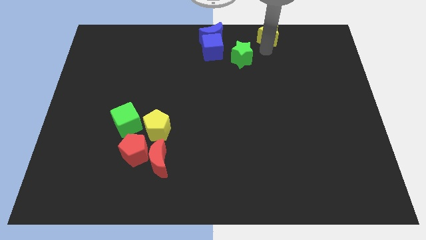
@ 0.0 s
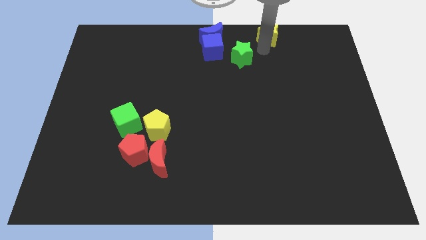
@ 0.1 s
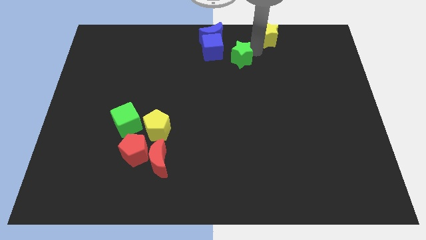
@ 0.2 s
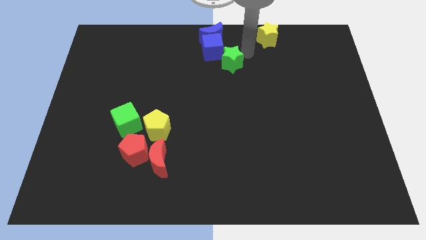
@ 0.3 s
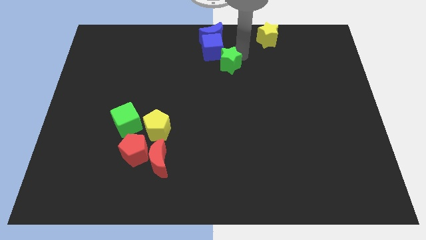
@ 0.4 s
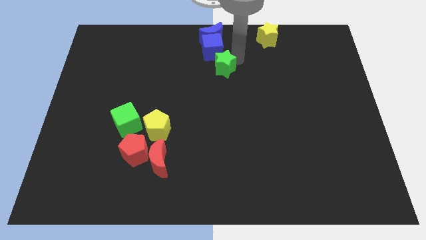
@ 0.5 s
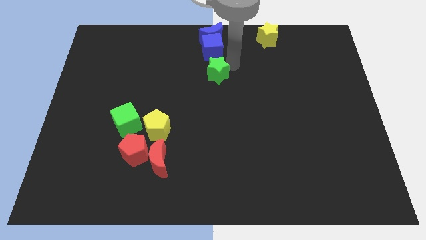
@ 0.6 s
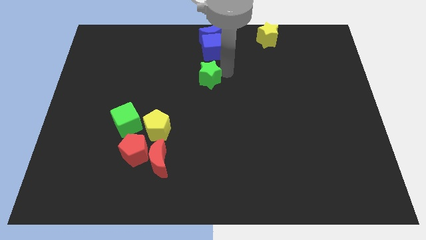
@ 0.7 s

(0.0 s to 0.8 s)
move the green star below to the blue cube

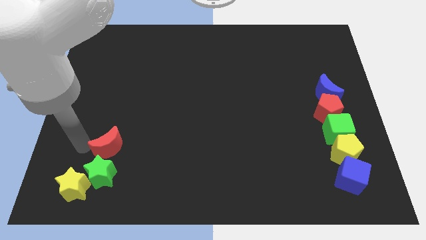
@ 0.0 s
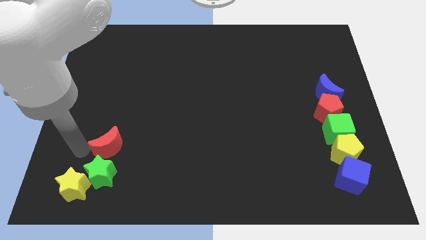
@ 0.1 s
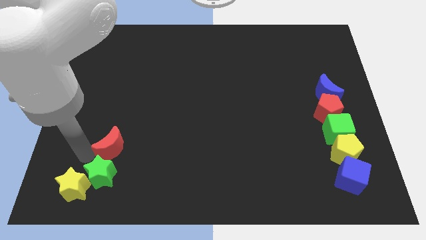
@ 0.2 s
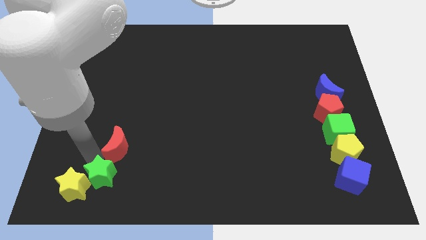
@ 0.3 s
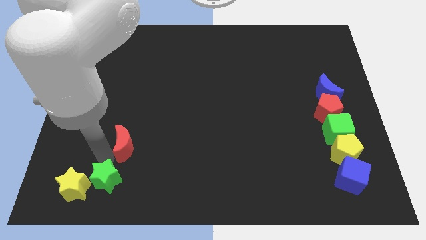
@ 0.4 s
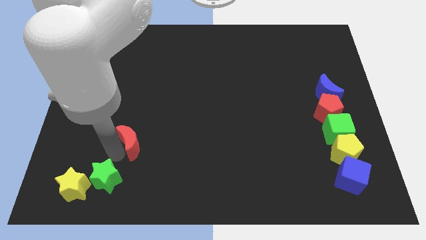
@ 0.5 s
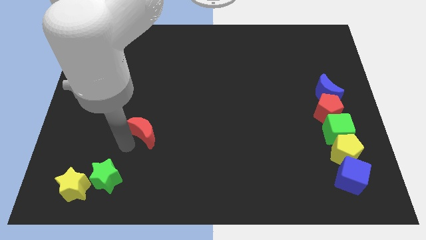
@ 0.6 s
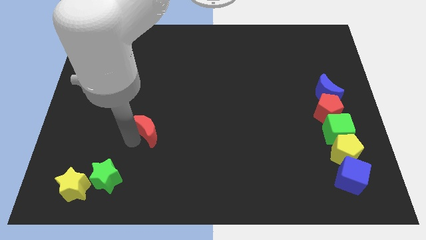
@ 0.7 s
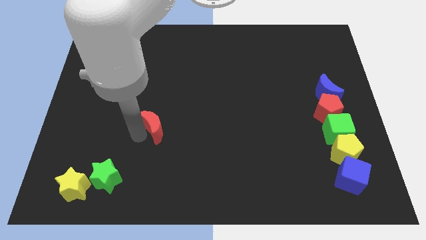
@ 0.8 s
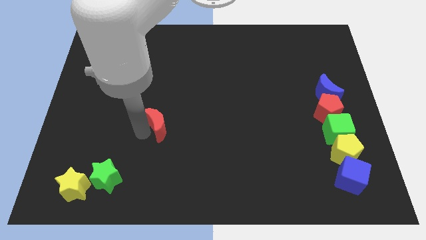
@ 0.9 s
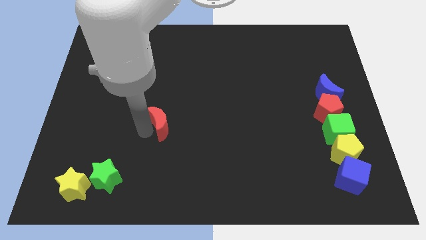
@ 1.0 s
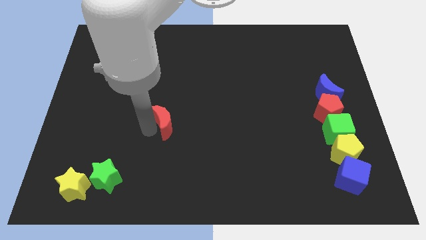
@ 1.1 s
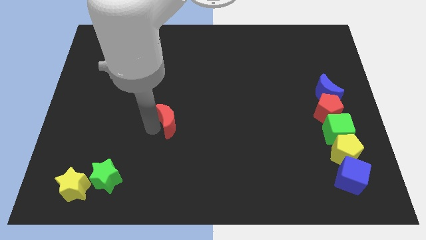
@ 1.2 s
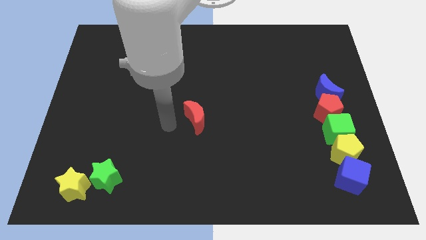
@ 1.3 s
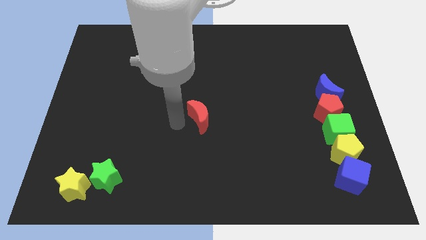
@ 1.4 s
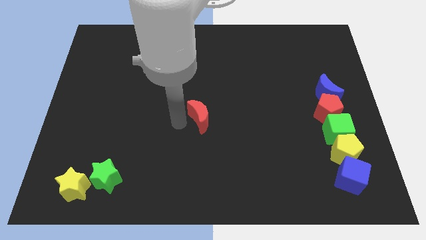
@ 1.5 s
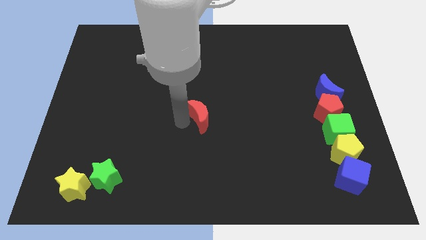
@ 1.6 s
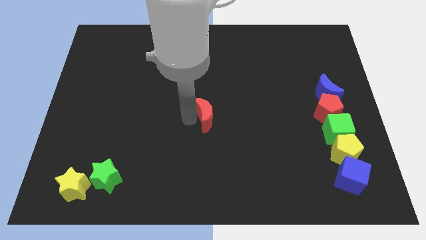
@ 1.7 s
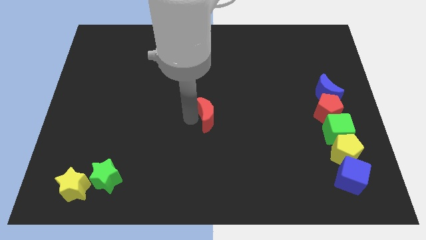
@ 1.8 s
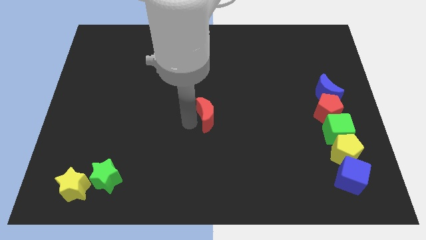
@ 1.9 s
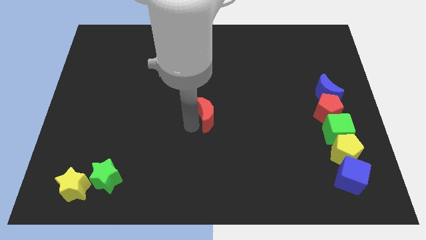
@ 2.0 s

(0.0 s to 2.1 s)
put the red moon at the center of the board

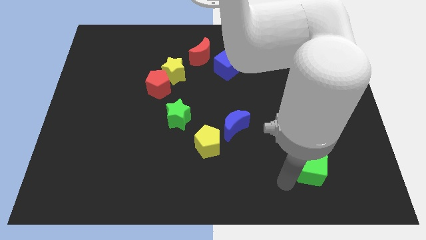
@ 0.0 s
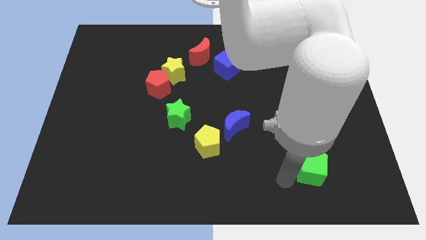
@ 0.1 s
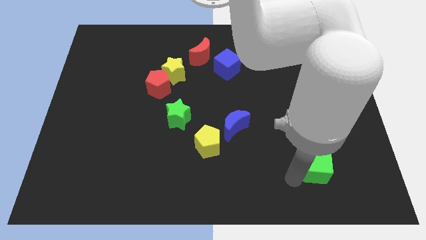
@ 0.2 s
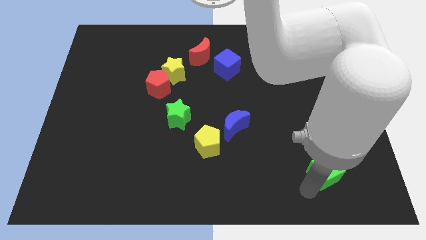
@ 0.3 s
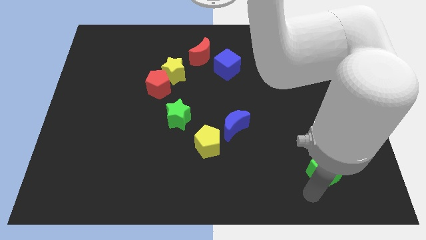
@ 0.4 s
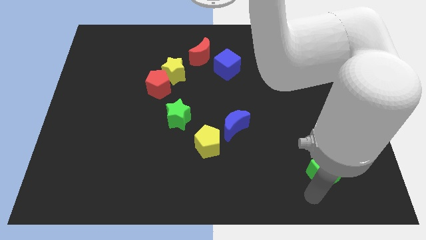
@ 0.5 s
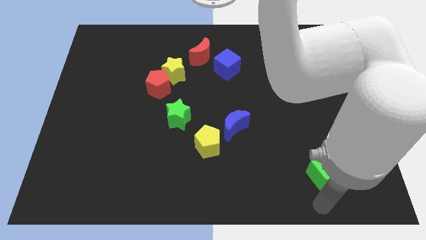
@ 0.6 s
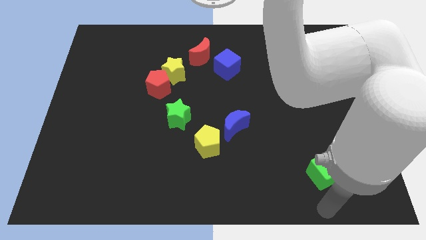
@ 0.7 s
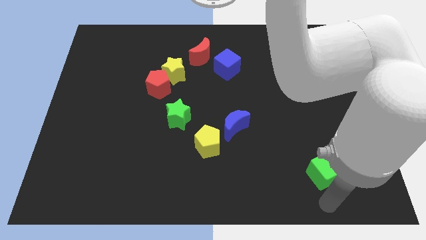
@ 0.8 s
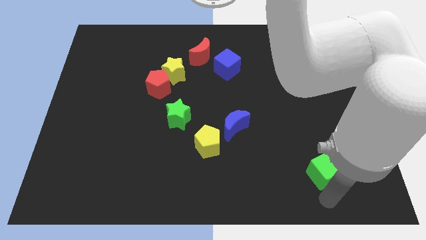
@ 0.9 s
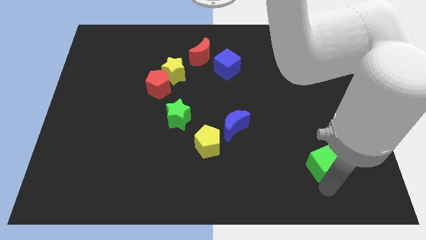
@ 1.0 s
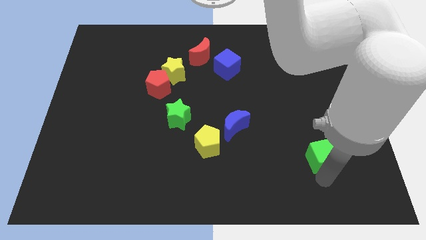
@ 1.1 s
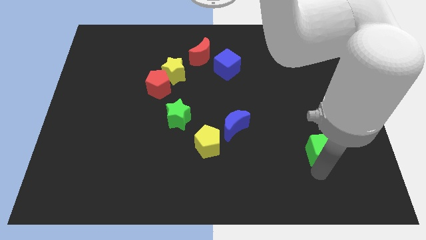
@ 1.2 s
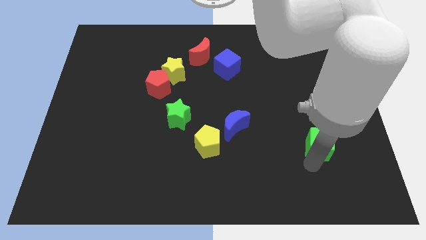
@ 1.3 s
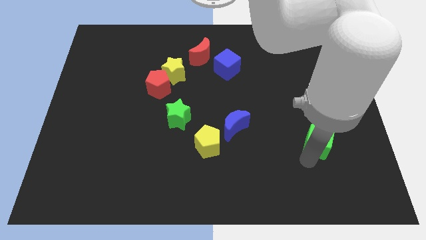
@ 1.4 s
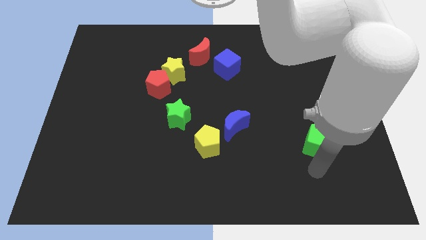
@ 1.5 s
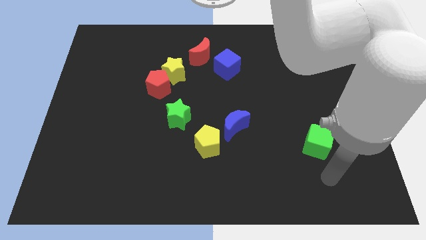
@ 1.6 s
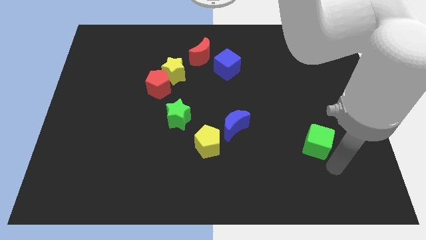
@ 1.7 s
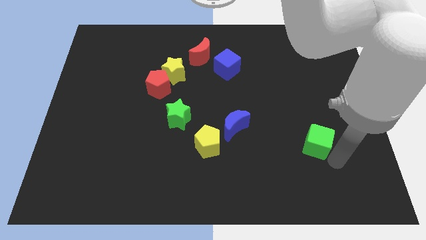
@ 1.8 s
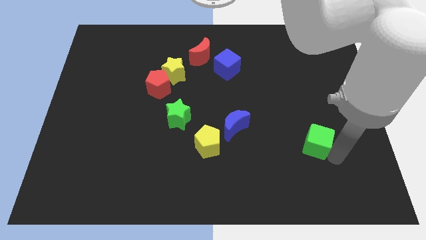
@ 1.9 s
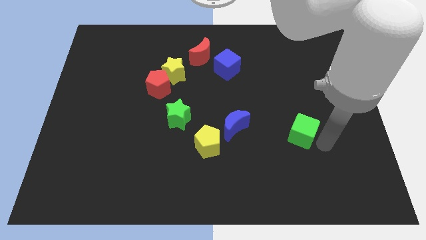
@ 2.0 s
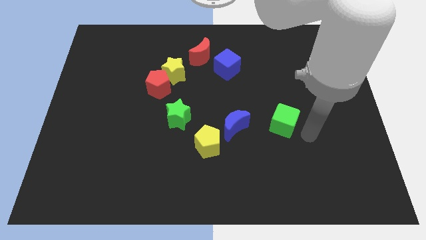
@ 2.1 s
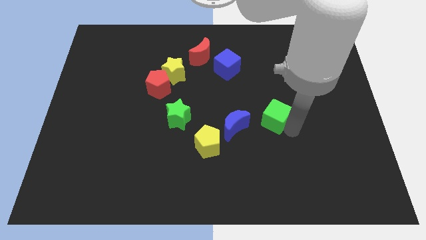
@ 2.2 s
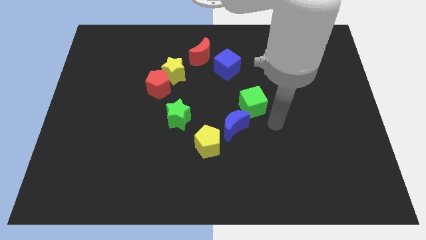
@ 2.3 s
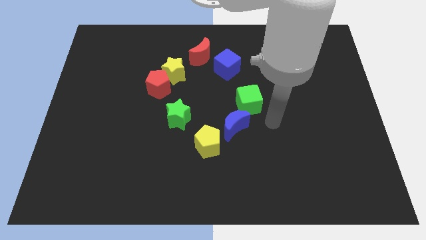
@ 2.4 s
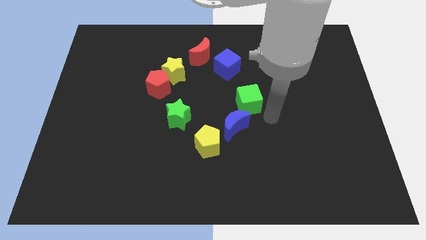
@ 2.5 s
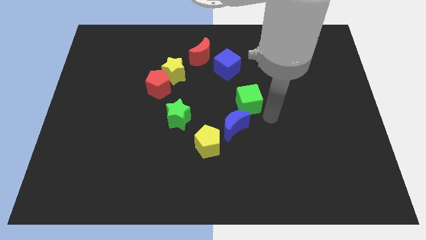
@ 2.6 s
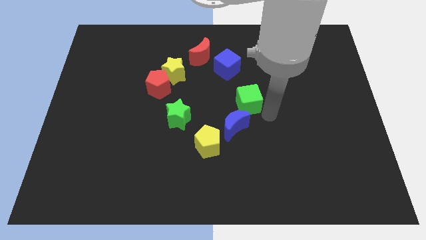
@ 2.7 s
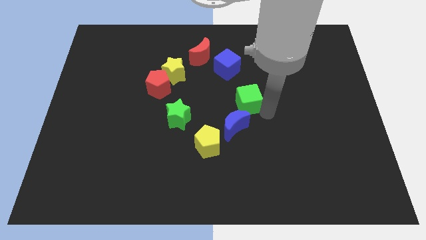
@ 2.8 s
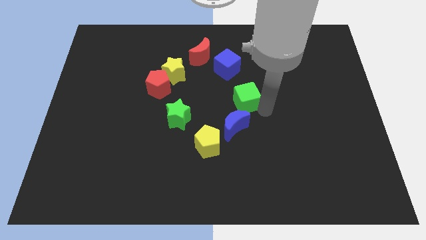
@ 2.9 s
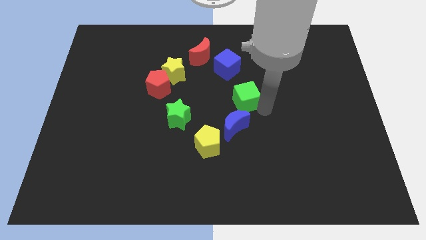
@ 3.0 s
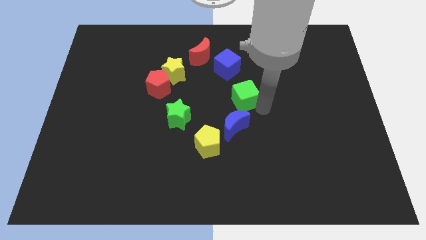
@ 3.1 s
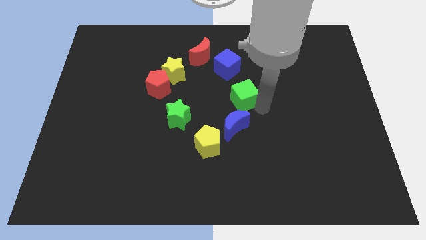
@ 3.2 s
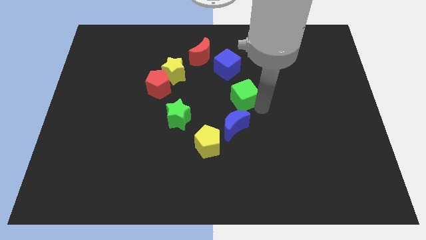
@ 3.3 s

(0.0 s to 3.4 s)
place the green cube above the blue crescent

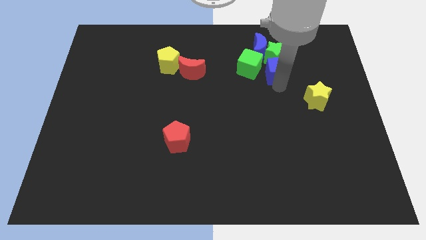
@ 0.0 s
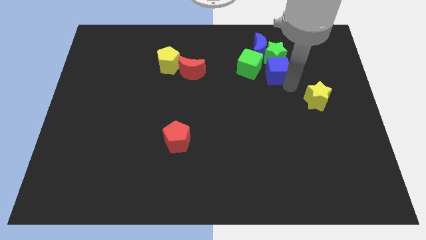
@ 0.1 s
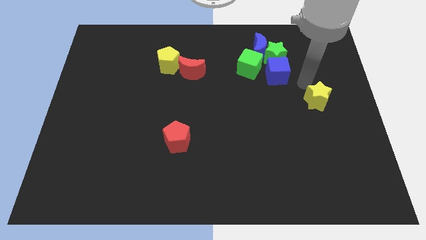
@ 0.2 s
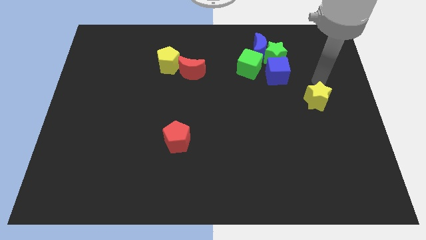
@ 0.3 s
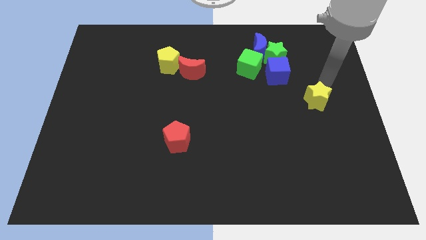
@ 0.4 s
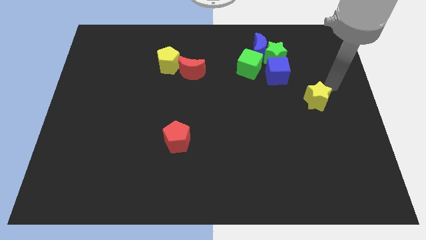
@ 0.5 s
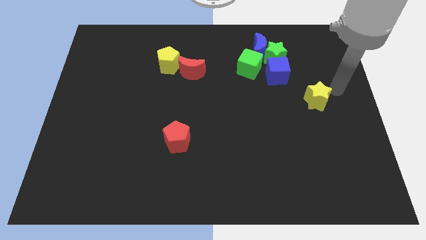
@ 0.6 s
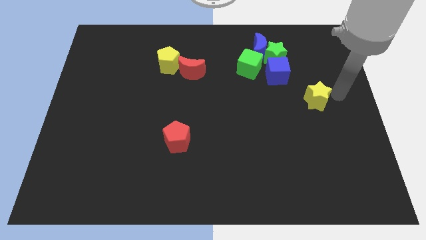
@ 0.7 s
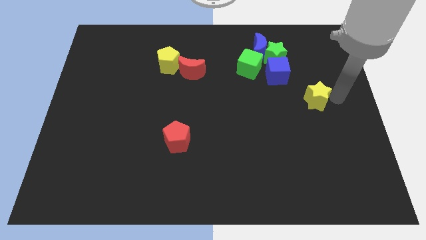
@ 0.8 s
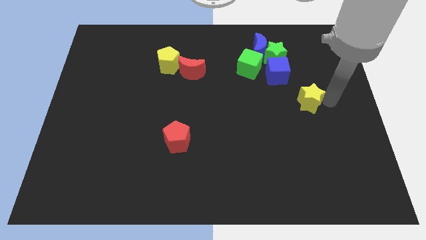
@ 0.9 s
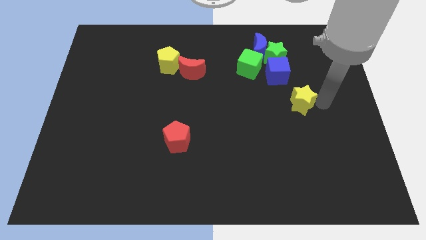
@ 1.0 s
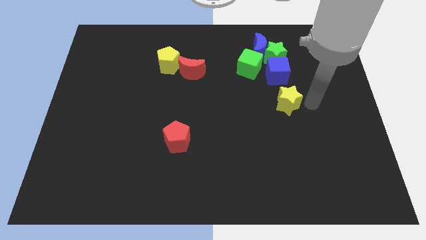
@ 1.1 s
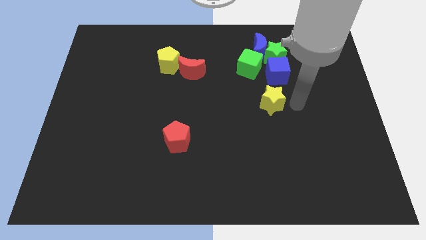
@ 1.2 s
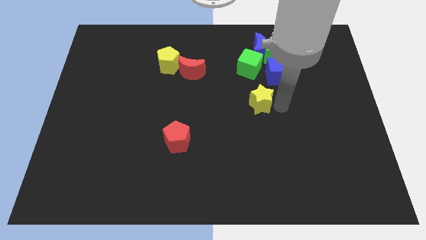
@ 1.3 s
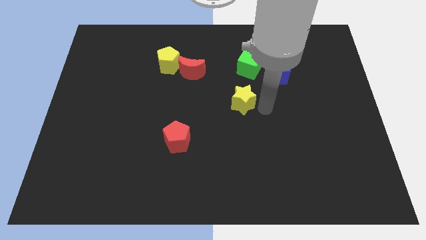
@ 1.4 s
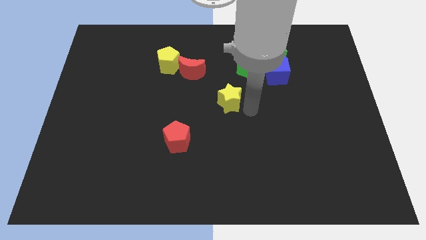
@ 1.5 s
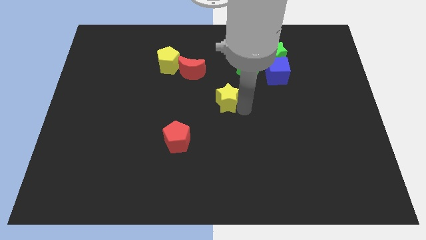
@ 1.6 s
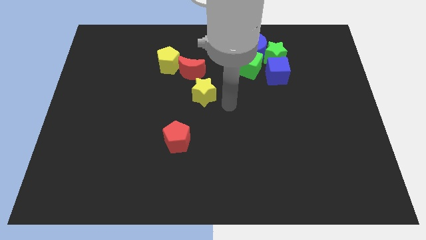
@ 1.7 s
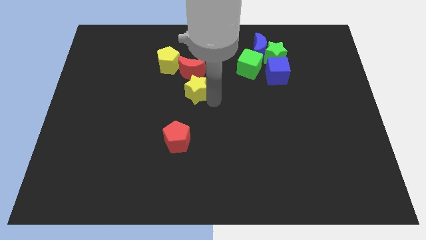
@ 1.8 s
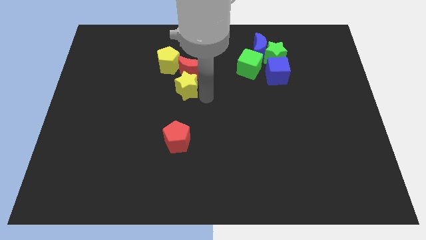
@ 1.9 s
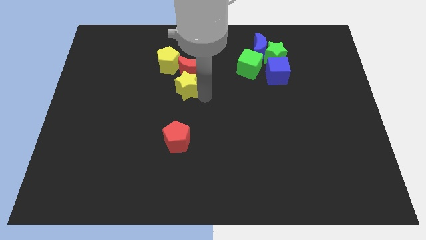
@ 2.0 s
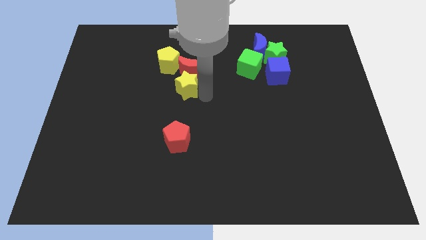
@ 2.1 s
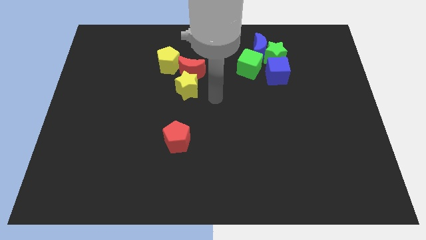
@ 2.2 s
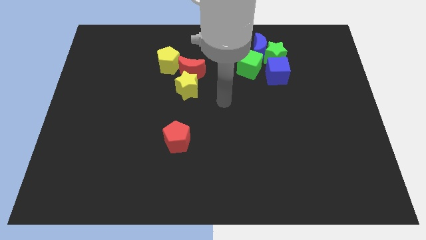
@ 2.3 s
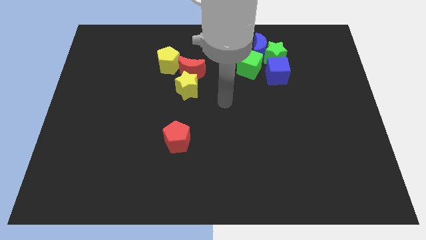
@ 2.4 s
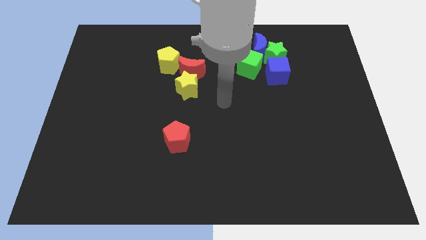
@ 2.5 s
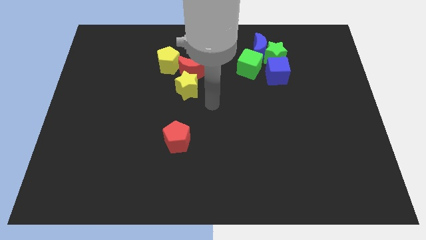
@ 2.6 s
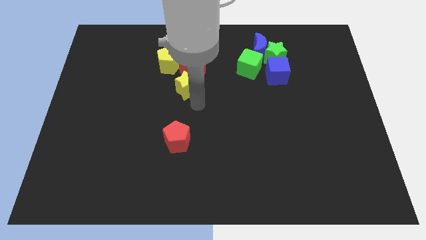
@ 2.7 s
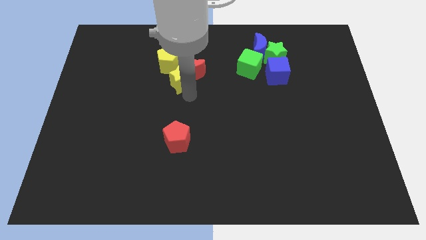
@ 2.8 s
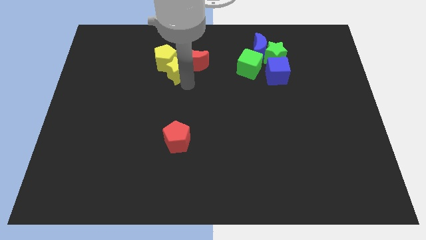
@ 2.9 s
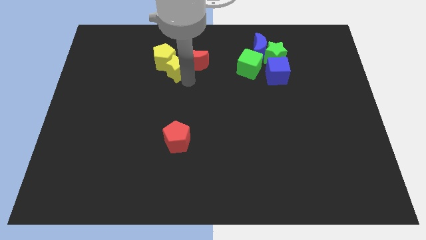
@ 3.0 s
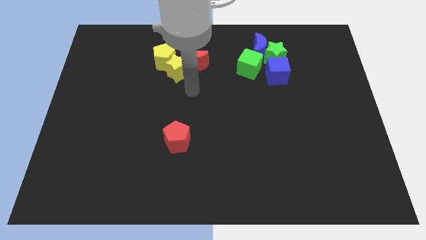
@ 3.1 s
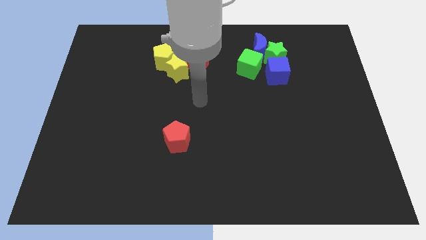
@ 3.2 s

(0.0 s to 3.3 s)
move the yellow star into the yellow pentagon
